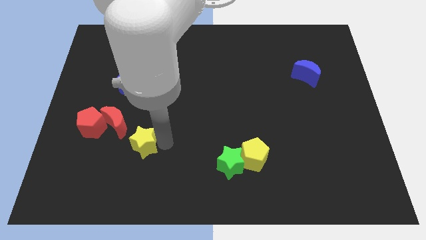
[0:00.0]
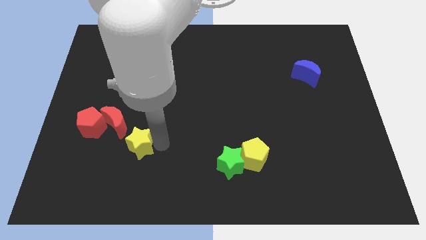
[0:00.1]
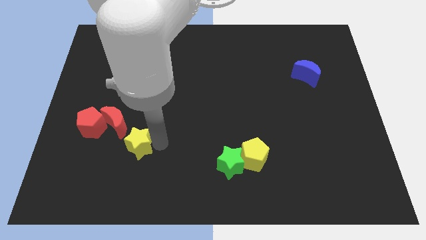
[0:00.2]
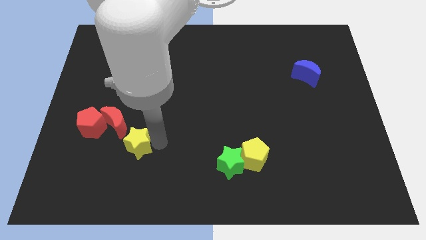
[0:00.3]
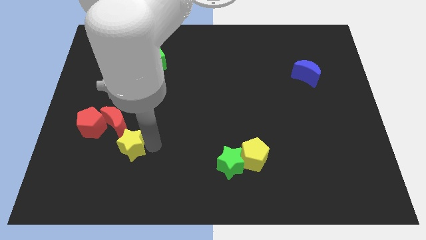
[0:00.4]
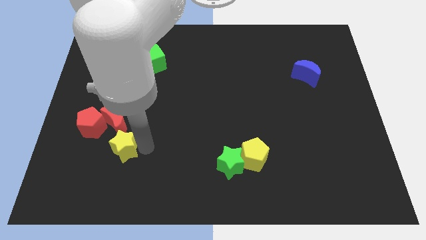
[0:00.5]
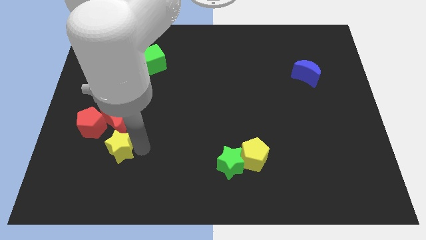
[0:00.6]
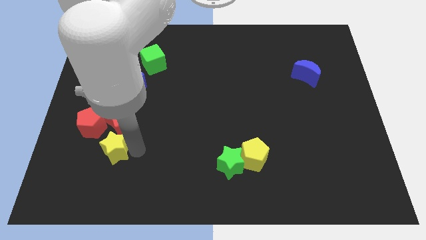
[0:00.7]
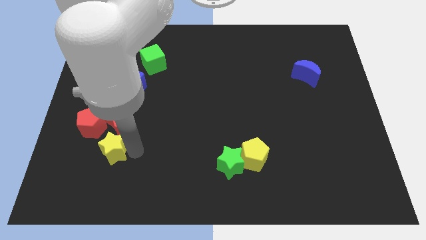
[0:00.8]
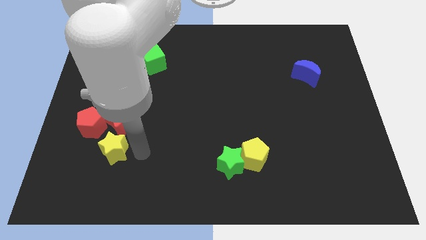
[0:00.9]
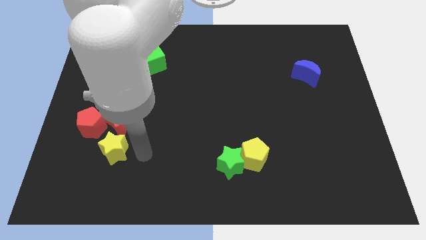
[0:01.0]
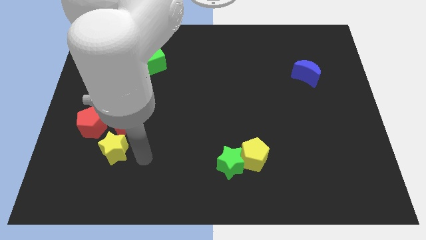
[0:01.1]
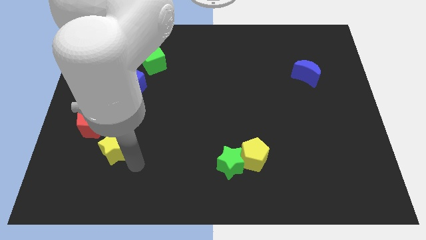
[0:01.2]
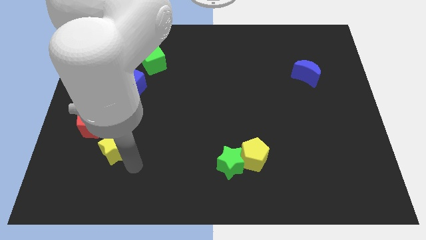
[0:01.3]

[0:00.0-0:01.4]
place the yellow star below the red blocks

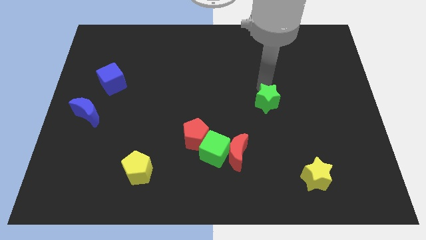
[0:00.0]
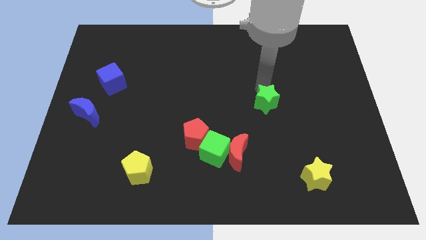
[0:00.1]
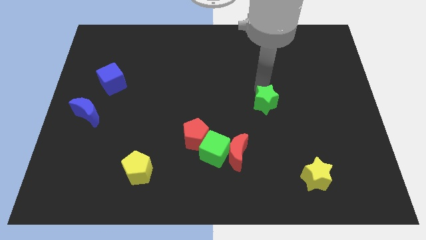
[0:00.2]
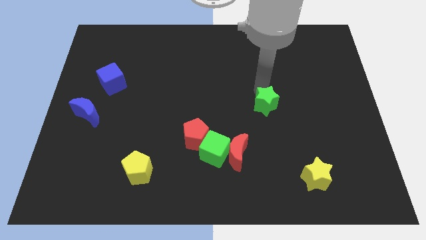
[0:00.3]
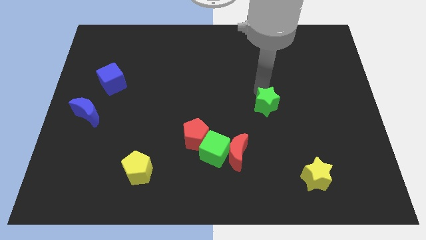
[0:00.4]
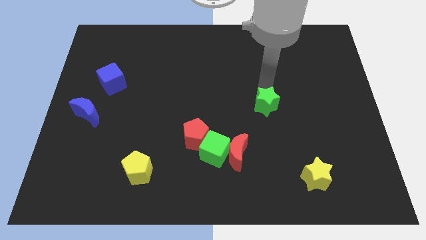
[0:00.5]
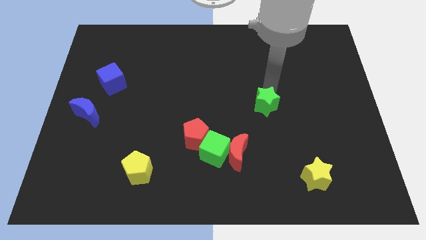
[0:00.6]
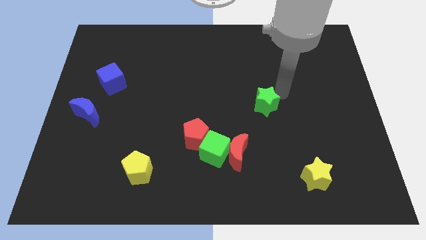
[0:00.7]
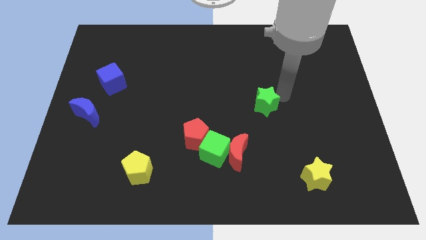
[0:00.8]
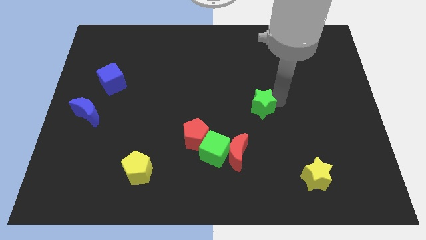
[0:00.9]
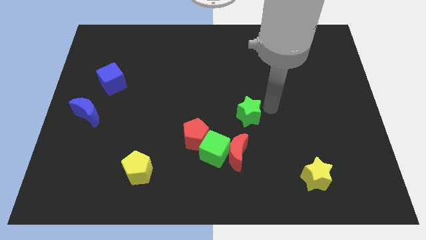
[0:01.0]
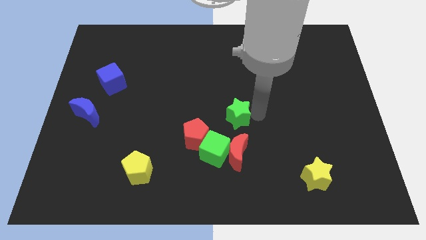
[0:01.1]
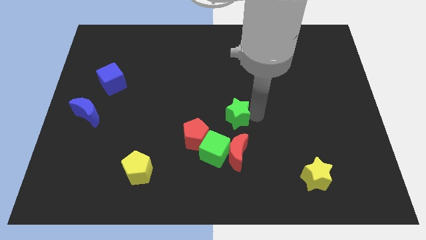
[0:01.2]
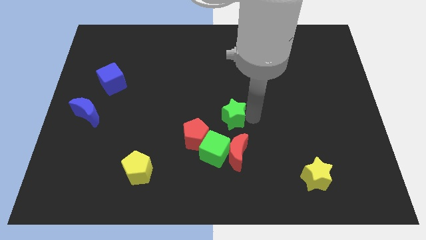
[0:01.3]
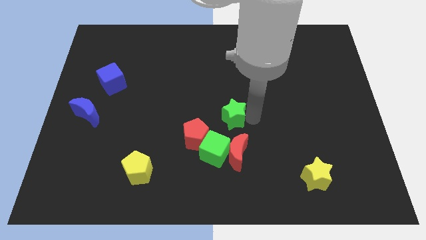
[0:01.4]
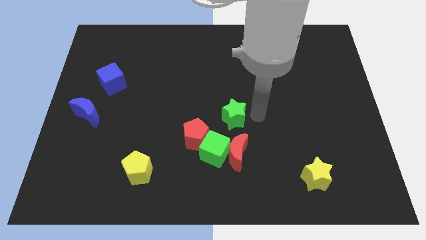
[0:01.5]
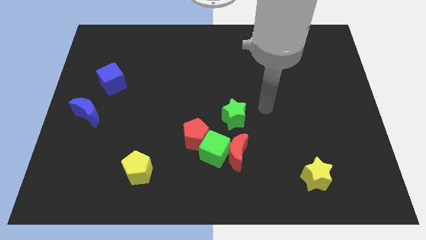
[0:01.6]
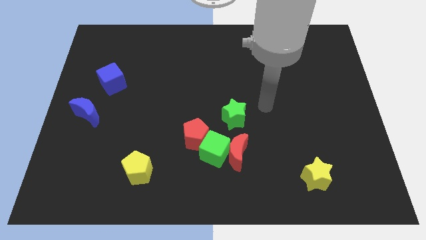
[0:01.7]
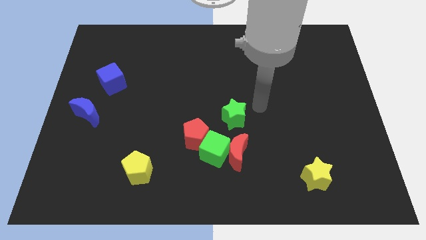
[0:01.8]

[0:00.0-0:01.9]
move the green star to the top of the red moon

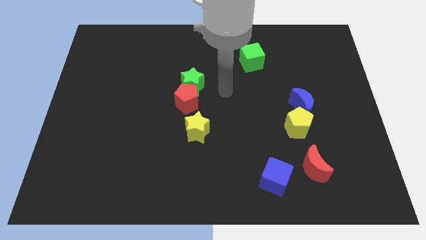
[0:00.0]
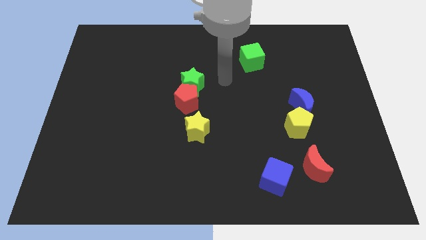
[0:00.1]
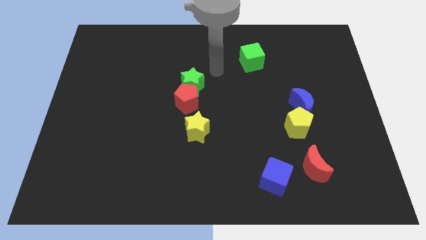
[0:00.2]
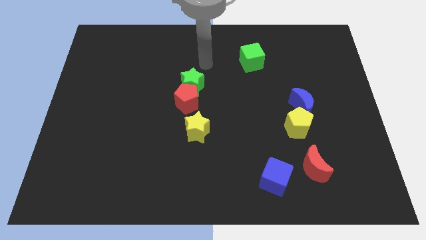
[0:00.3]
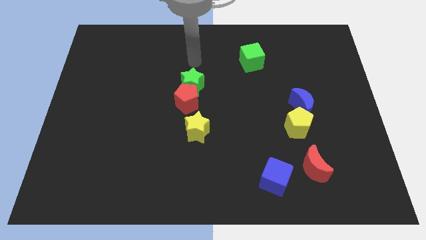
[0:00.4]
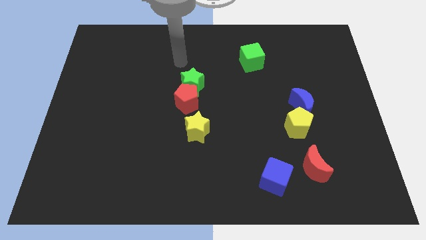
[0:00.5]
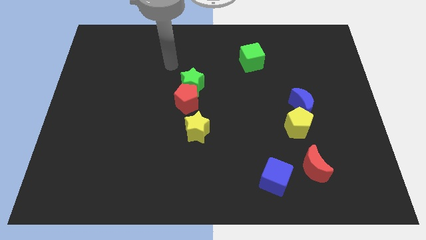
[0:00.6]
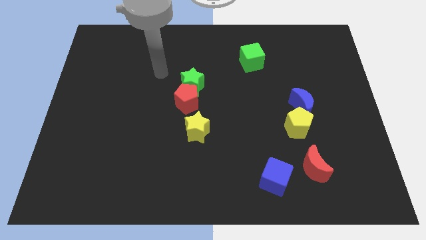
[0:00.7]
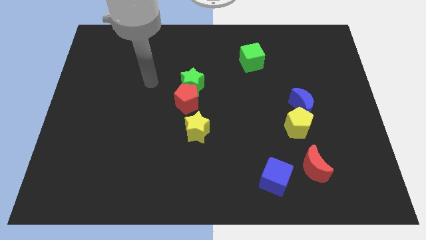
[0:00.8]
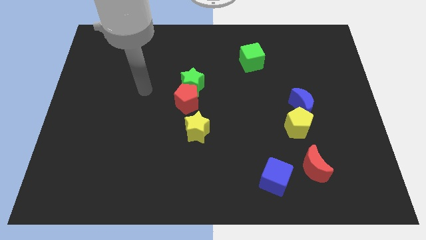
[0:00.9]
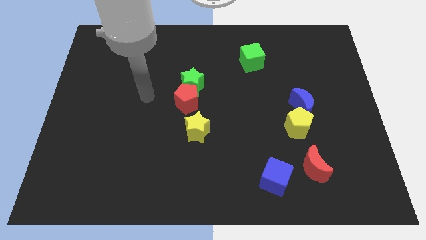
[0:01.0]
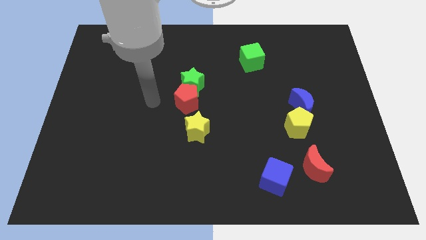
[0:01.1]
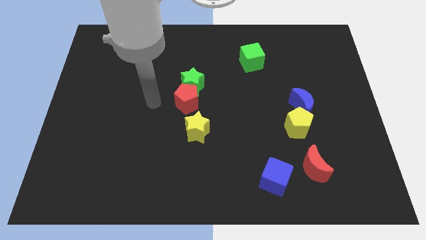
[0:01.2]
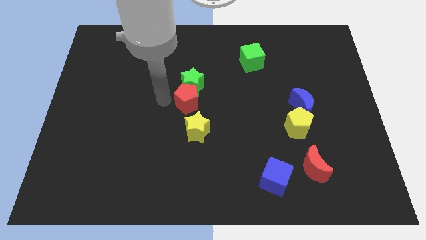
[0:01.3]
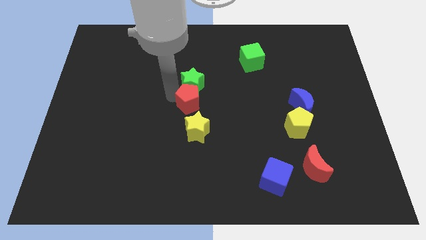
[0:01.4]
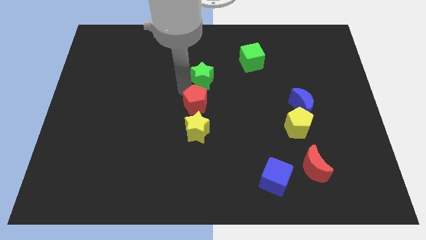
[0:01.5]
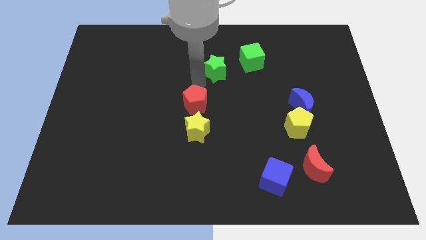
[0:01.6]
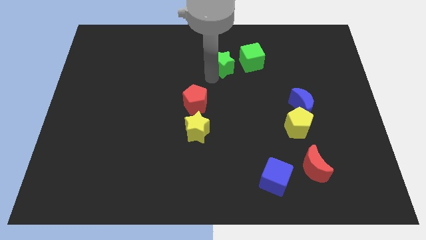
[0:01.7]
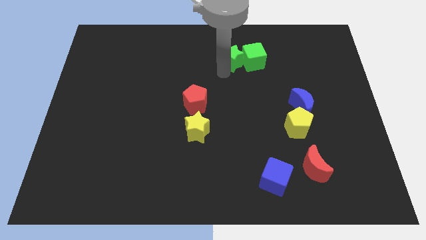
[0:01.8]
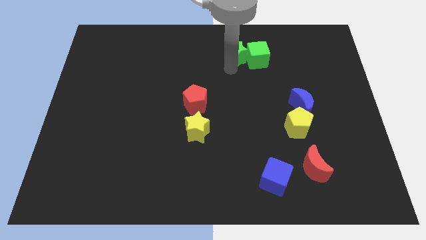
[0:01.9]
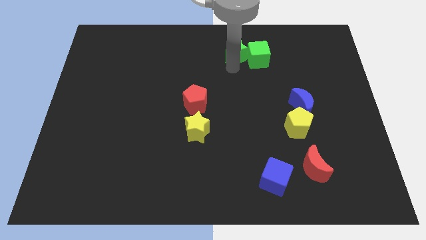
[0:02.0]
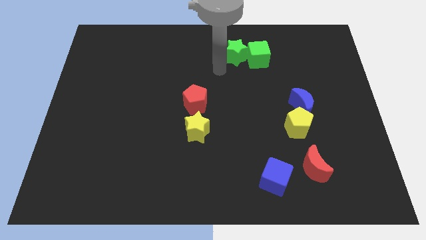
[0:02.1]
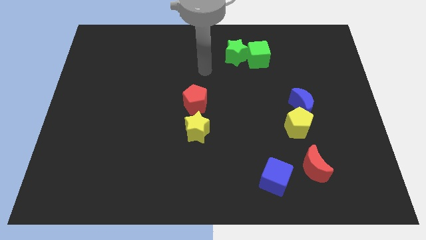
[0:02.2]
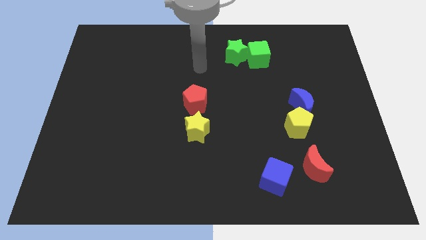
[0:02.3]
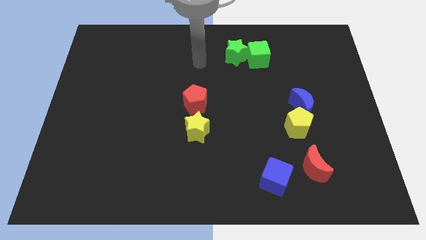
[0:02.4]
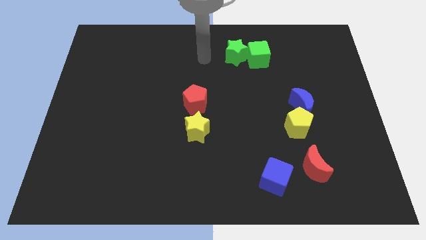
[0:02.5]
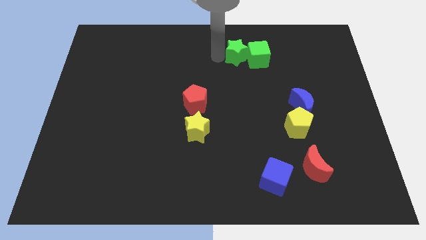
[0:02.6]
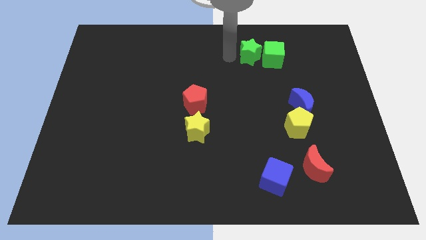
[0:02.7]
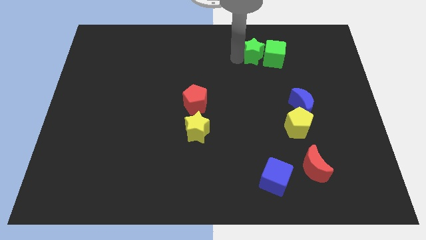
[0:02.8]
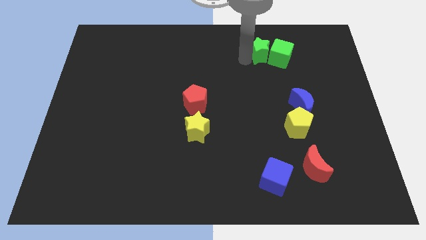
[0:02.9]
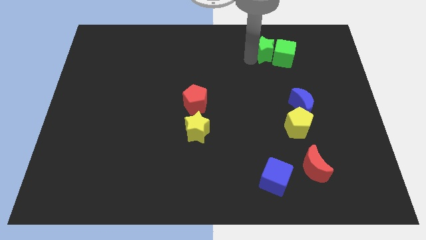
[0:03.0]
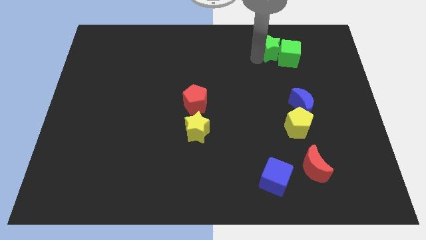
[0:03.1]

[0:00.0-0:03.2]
push the green star into the green cube

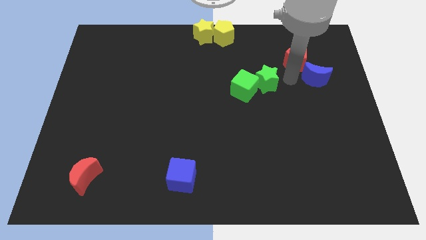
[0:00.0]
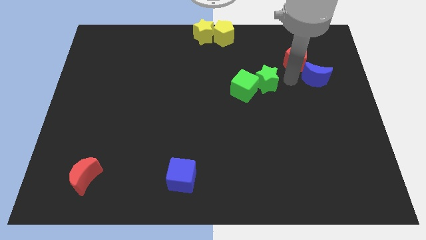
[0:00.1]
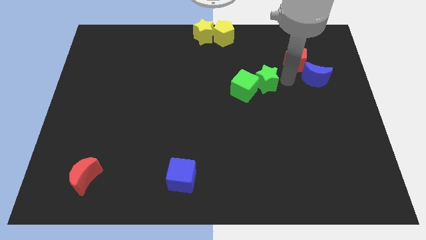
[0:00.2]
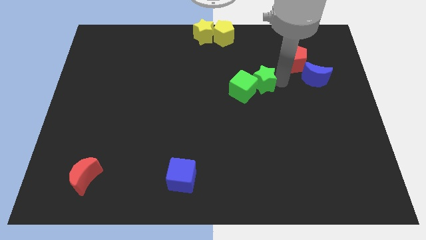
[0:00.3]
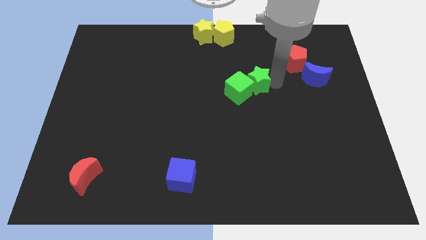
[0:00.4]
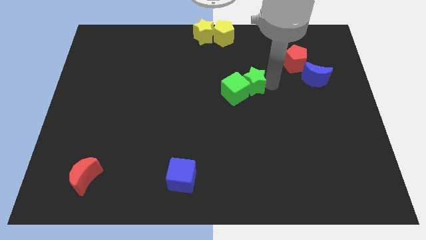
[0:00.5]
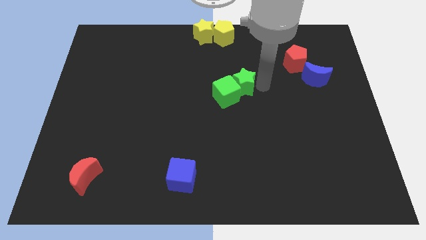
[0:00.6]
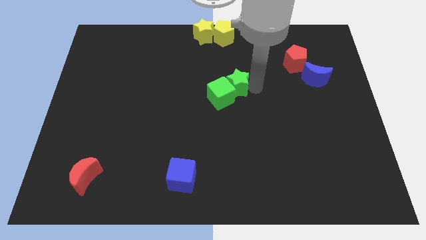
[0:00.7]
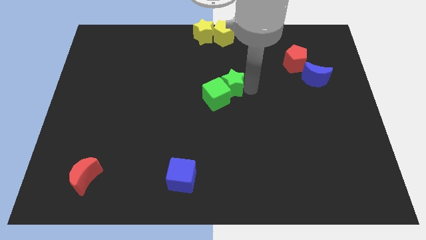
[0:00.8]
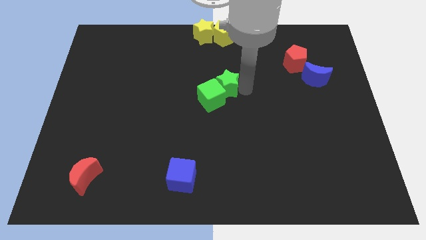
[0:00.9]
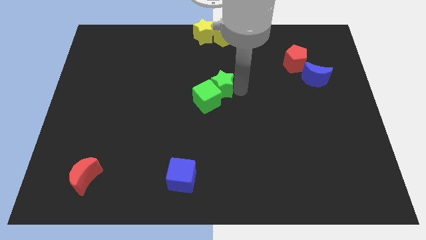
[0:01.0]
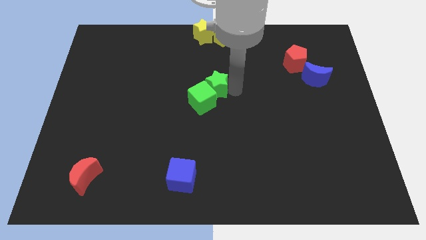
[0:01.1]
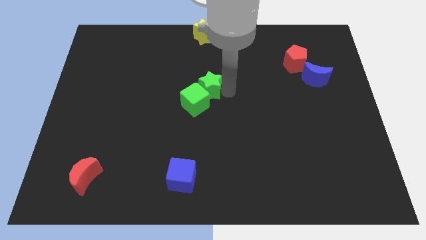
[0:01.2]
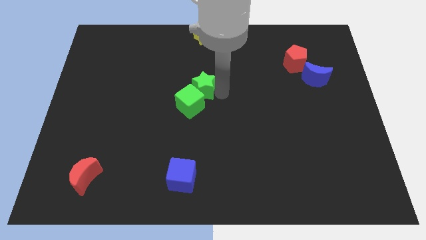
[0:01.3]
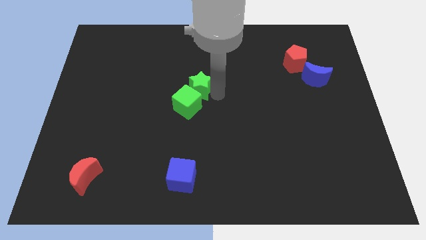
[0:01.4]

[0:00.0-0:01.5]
move green blocks to the center of the board

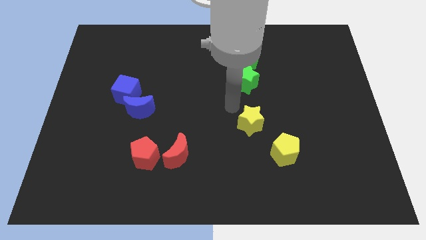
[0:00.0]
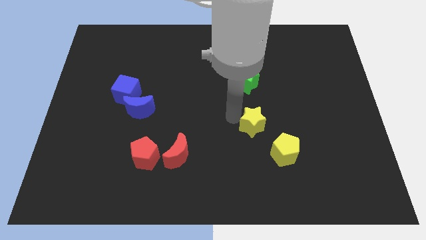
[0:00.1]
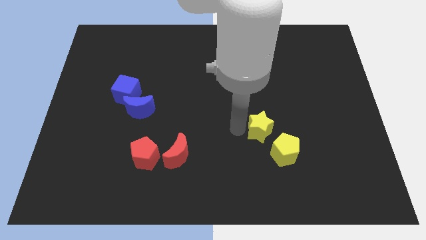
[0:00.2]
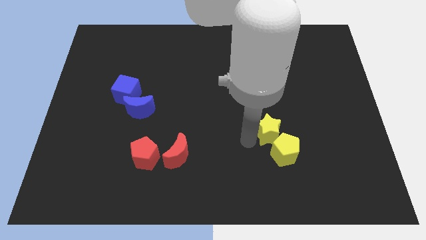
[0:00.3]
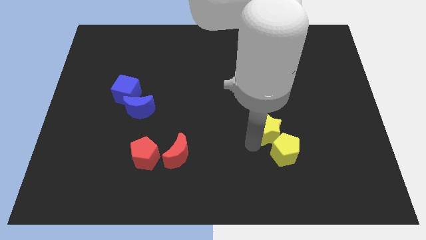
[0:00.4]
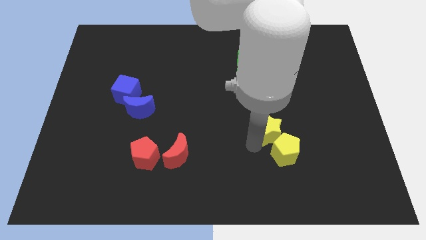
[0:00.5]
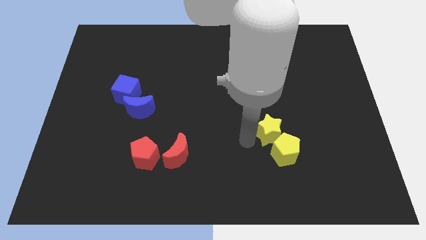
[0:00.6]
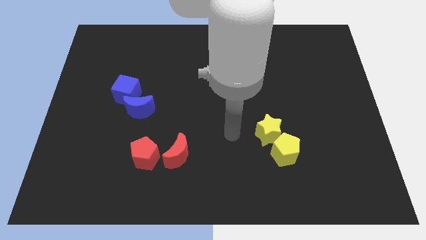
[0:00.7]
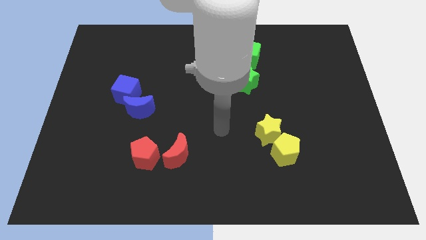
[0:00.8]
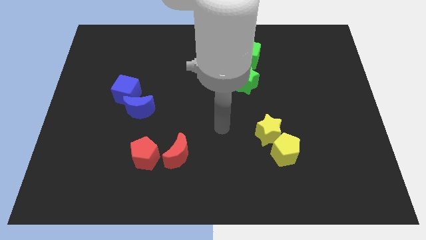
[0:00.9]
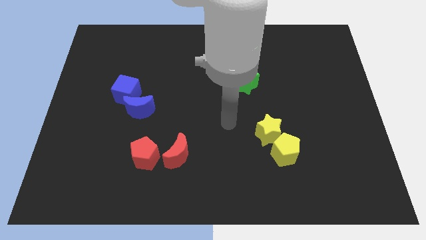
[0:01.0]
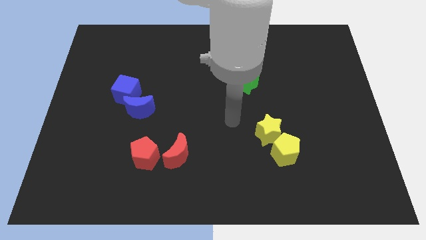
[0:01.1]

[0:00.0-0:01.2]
group up the yellow blocks
